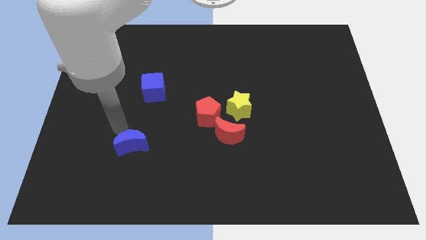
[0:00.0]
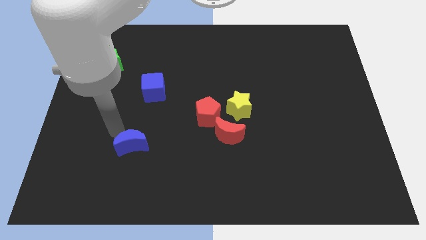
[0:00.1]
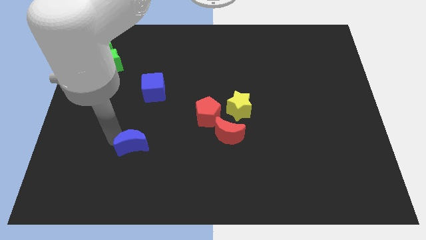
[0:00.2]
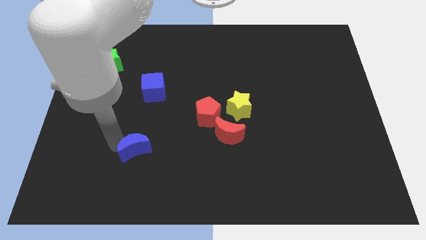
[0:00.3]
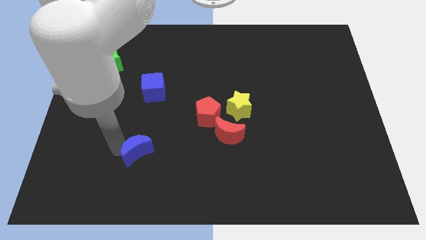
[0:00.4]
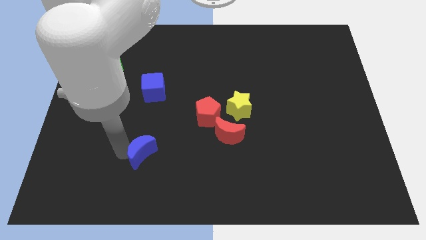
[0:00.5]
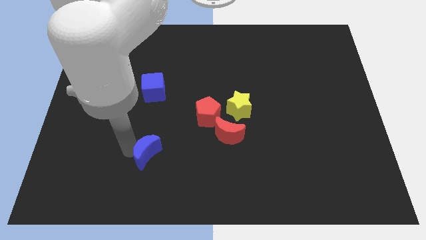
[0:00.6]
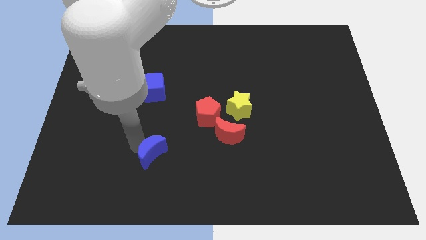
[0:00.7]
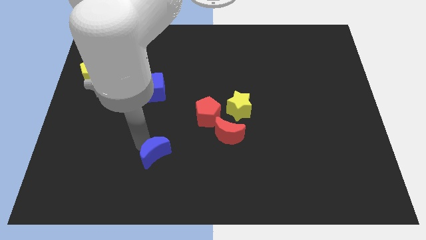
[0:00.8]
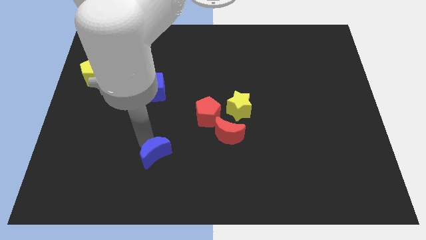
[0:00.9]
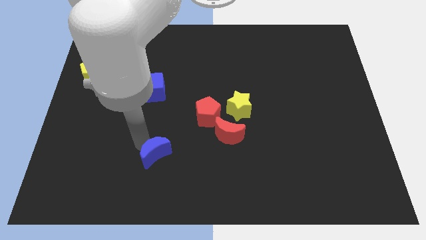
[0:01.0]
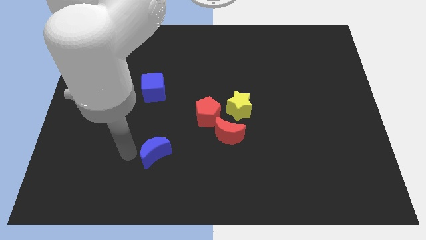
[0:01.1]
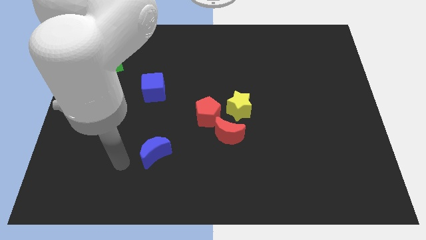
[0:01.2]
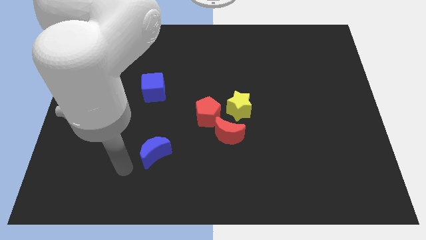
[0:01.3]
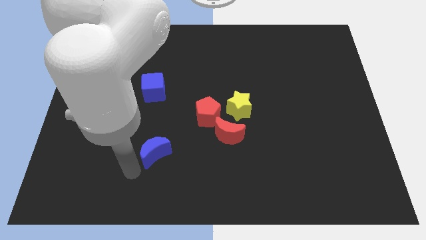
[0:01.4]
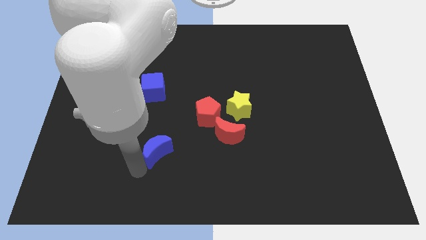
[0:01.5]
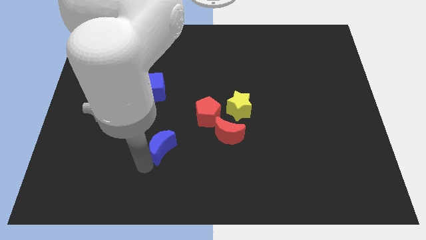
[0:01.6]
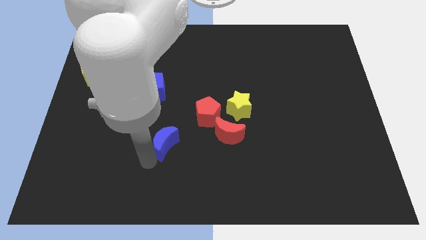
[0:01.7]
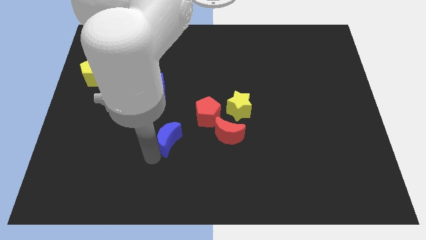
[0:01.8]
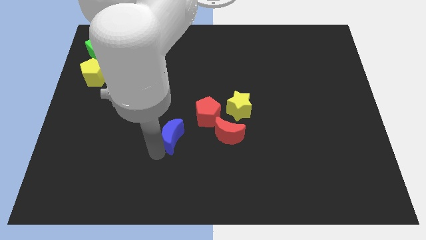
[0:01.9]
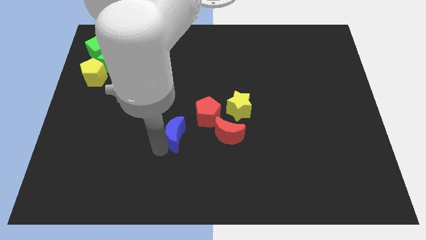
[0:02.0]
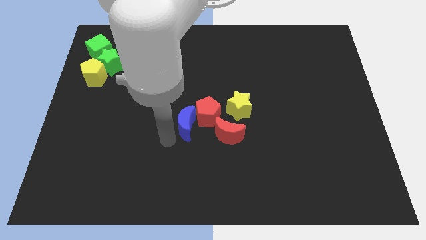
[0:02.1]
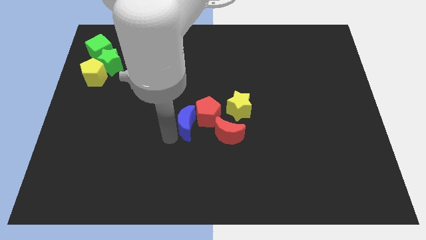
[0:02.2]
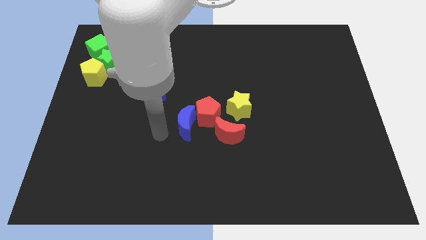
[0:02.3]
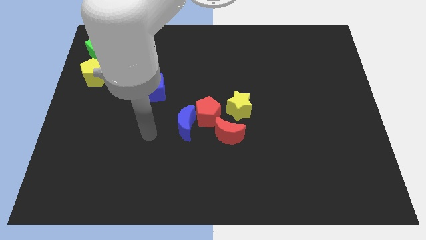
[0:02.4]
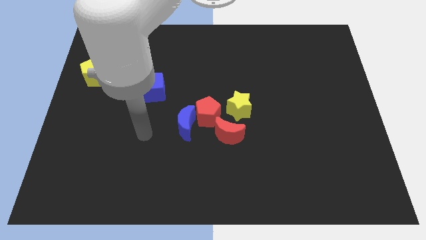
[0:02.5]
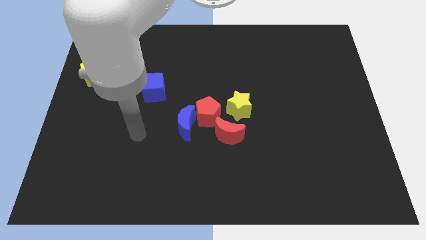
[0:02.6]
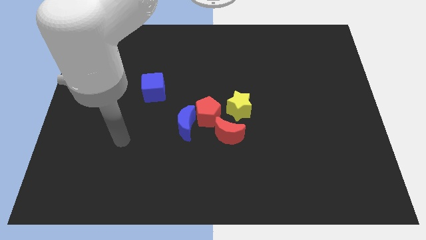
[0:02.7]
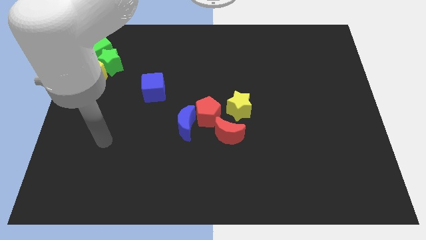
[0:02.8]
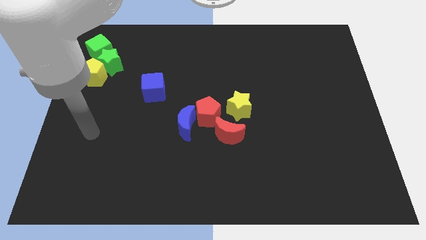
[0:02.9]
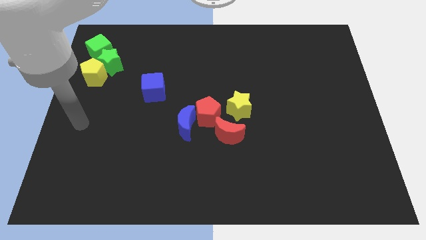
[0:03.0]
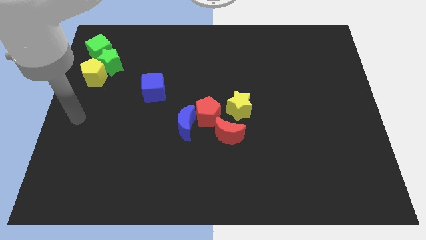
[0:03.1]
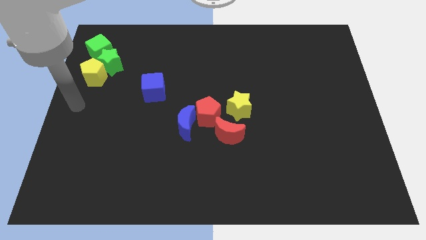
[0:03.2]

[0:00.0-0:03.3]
push the blue semi circle to the left side of the red pentagon

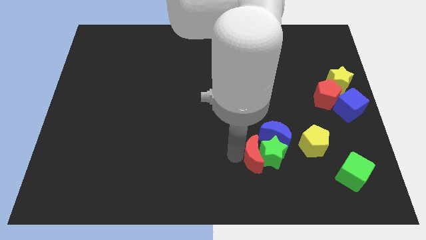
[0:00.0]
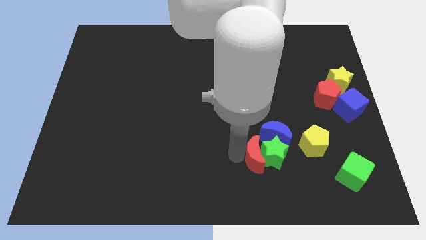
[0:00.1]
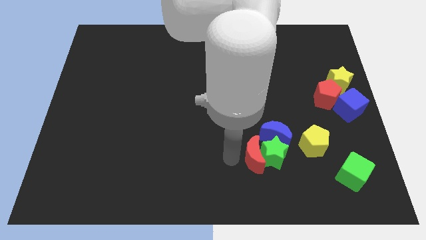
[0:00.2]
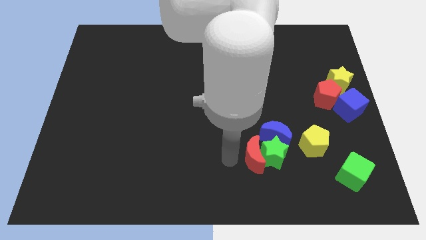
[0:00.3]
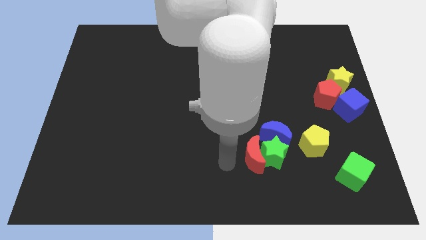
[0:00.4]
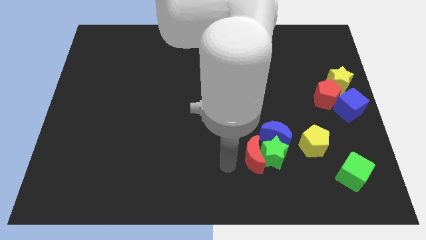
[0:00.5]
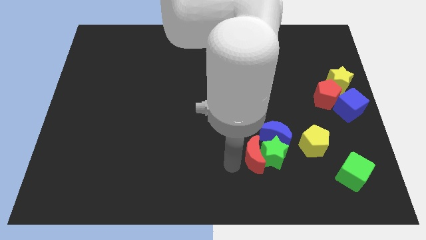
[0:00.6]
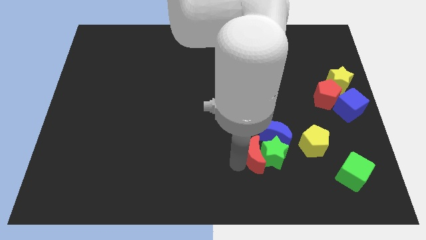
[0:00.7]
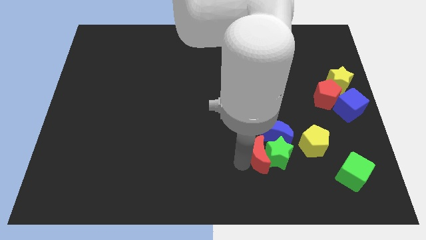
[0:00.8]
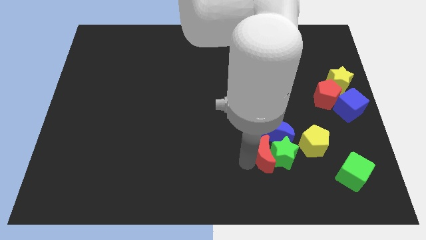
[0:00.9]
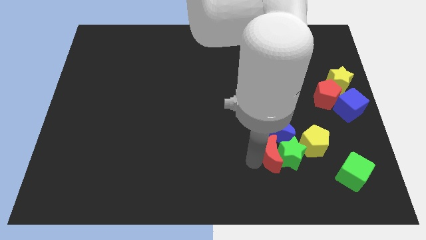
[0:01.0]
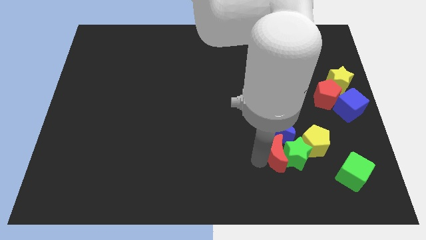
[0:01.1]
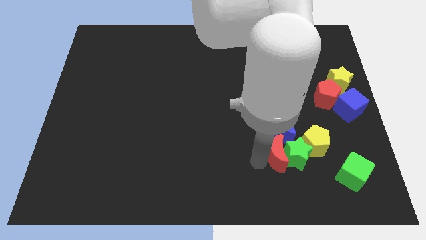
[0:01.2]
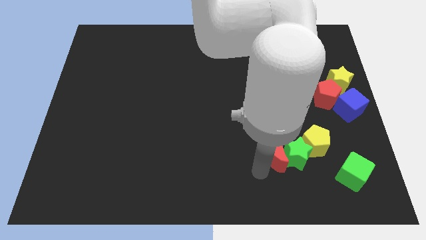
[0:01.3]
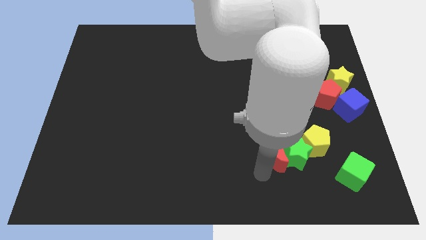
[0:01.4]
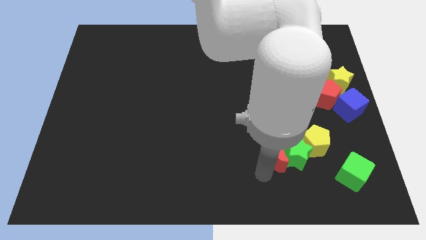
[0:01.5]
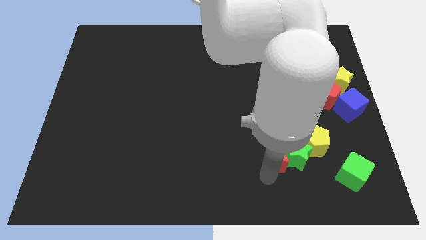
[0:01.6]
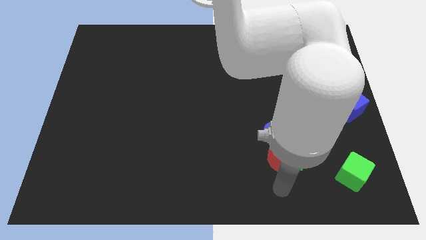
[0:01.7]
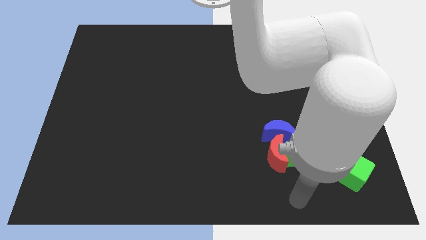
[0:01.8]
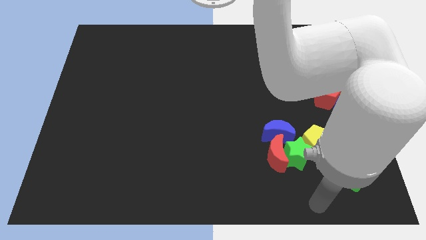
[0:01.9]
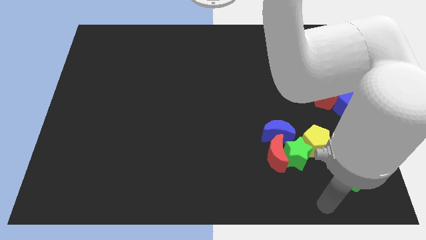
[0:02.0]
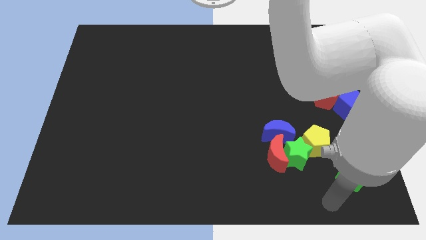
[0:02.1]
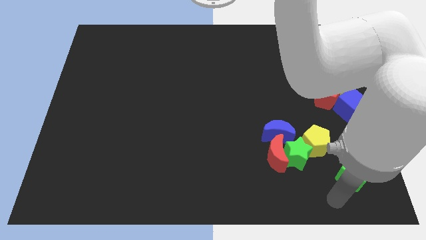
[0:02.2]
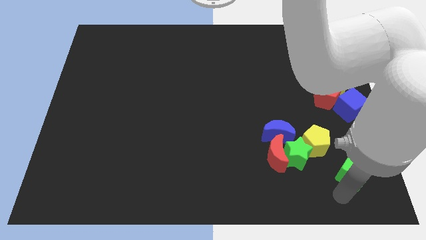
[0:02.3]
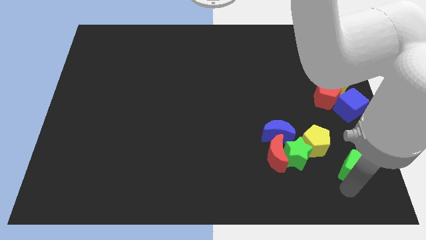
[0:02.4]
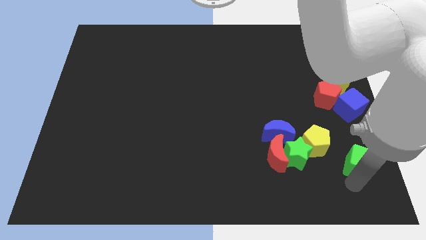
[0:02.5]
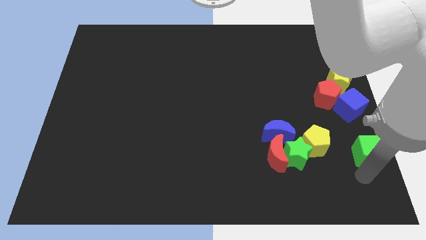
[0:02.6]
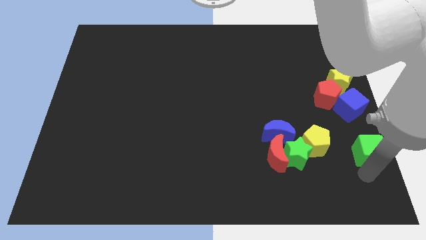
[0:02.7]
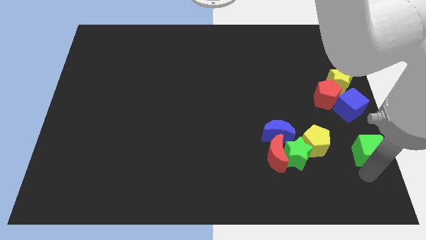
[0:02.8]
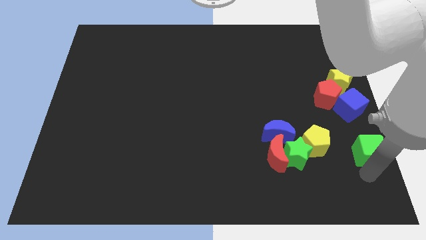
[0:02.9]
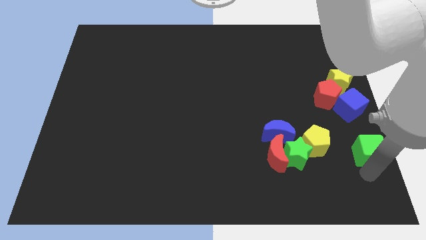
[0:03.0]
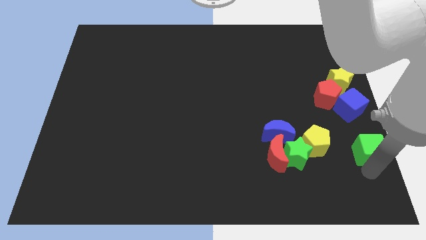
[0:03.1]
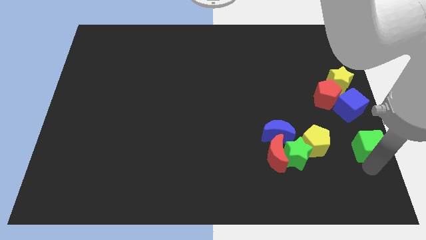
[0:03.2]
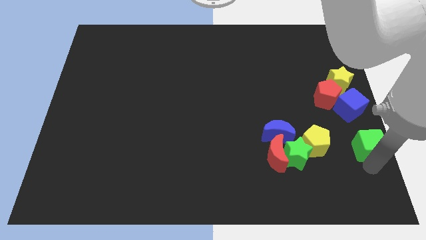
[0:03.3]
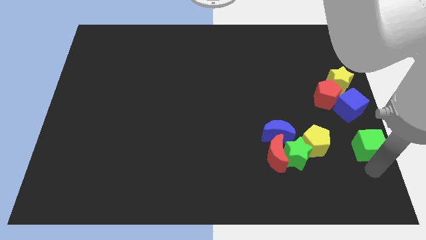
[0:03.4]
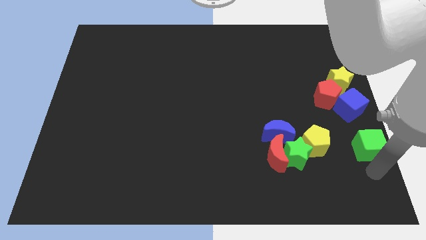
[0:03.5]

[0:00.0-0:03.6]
place the green cube diagonal to the right of the yellow pentagon

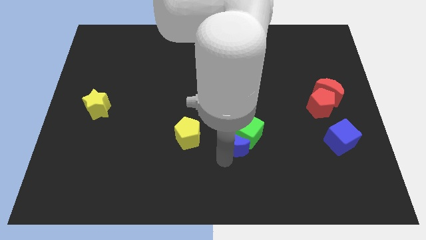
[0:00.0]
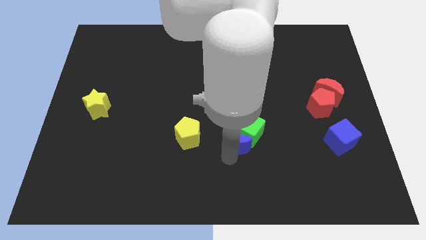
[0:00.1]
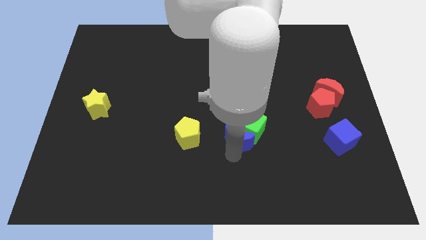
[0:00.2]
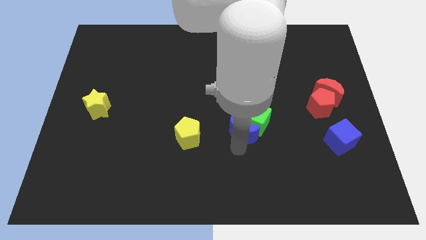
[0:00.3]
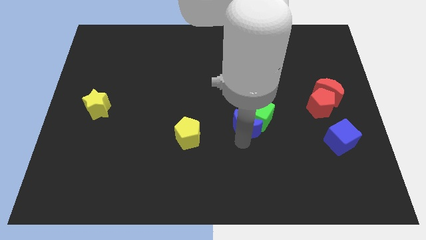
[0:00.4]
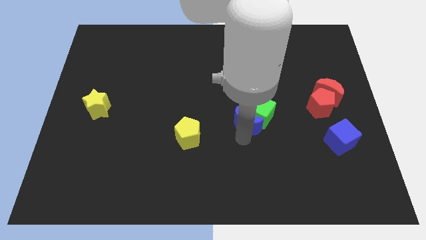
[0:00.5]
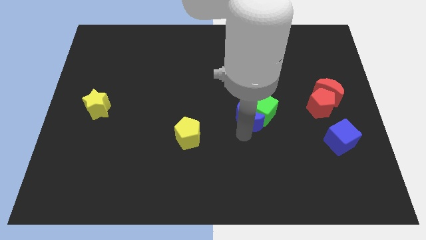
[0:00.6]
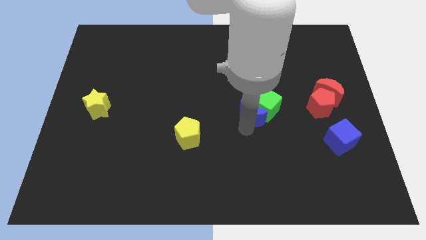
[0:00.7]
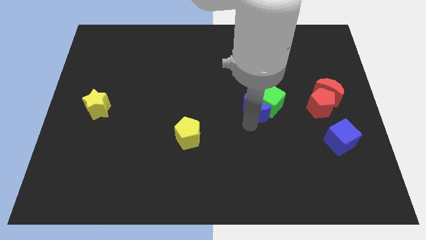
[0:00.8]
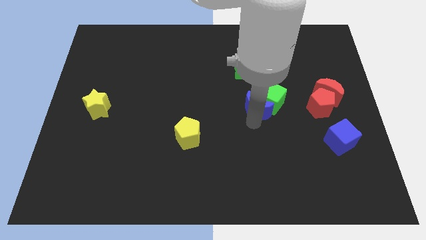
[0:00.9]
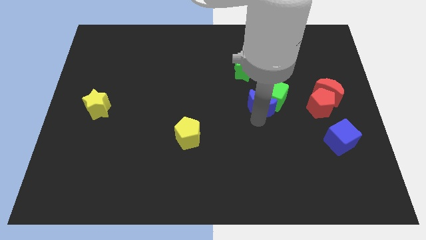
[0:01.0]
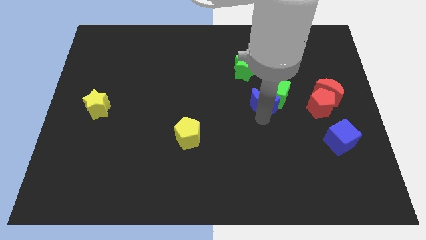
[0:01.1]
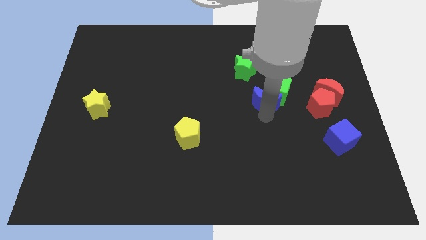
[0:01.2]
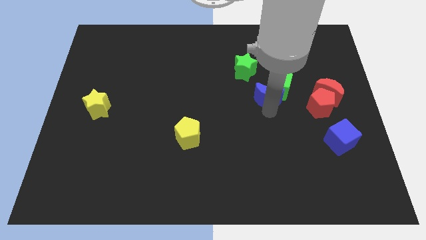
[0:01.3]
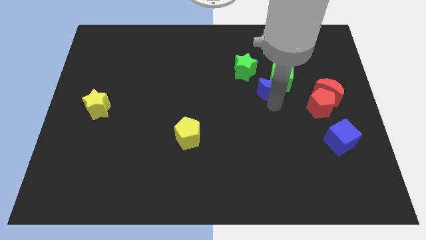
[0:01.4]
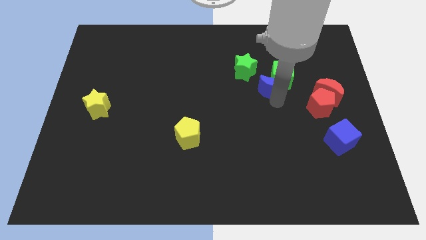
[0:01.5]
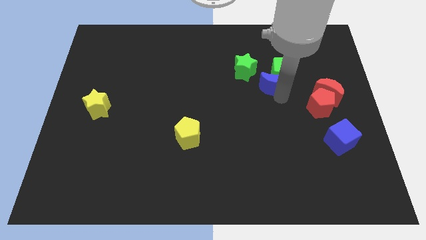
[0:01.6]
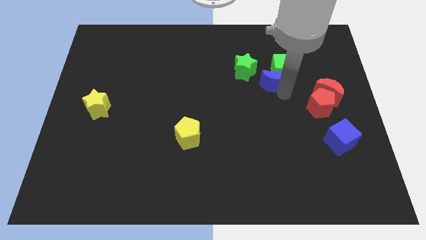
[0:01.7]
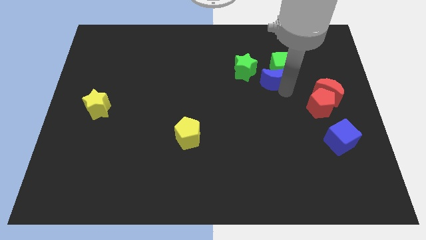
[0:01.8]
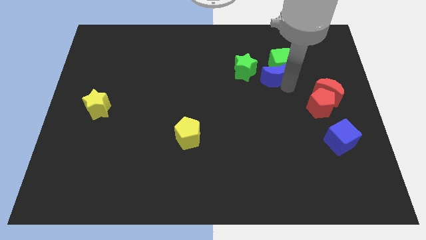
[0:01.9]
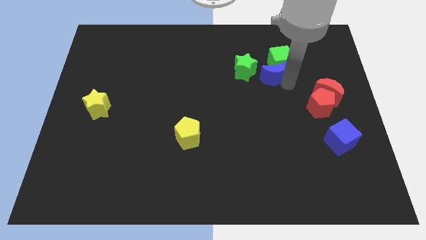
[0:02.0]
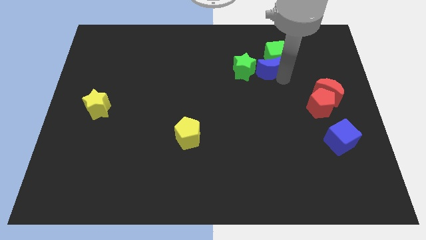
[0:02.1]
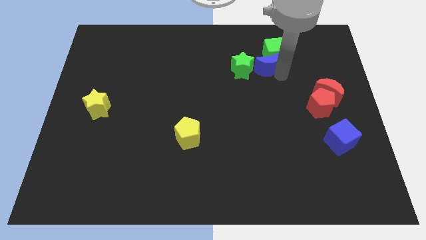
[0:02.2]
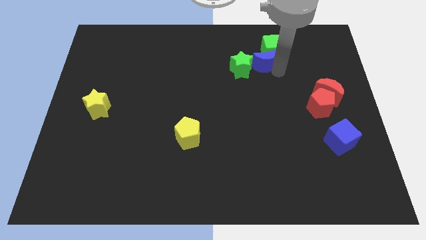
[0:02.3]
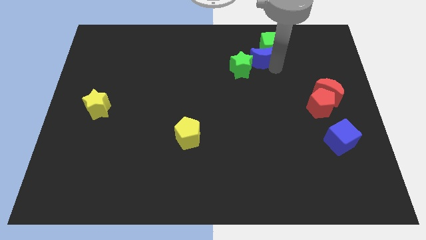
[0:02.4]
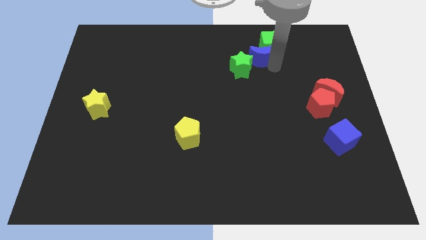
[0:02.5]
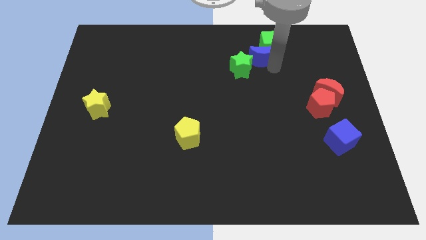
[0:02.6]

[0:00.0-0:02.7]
move the blue moon towards top center
